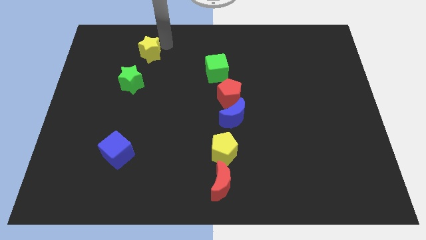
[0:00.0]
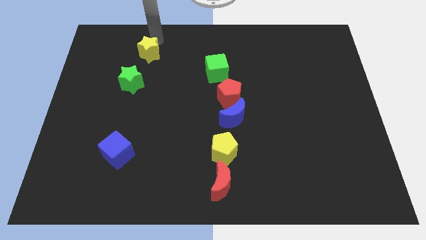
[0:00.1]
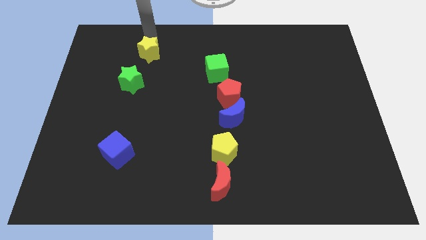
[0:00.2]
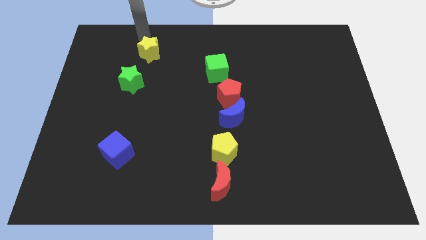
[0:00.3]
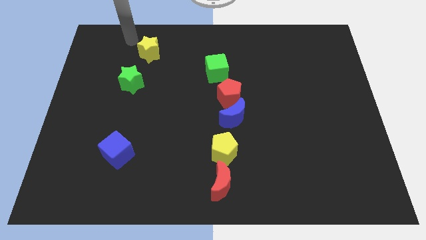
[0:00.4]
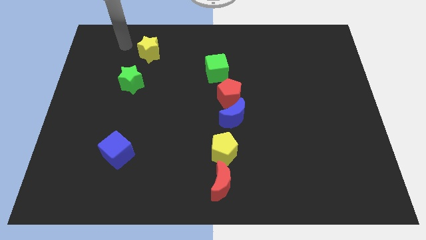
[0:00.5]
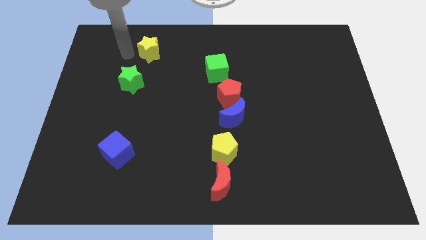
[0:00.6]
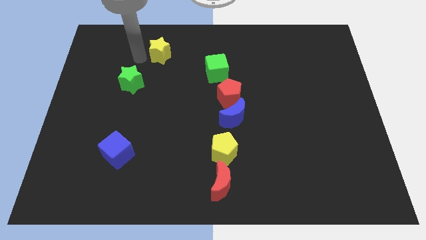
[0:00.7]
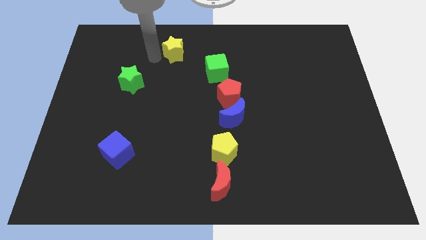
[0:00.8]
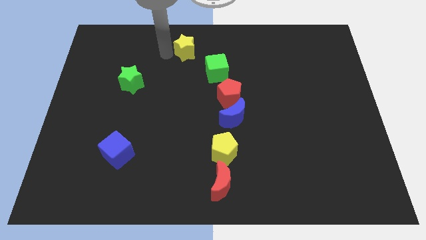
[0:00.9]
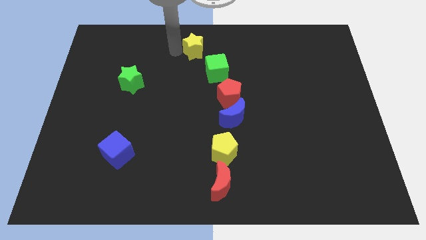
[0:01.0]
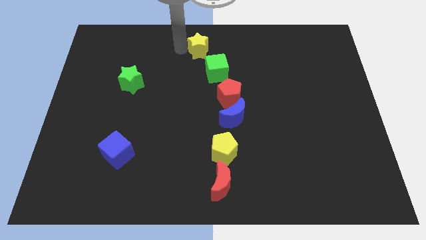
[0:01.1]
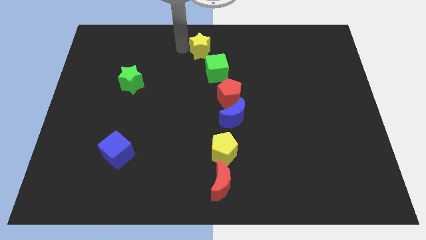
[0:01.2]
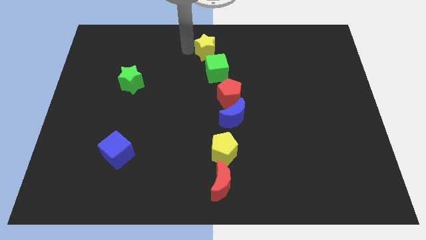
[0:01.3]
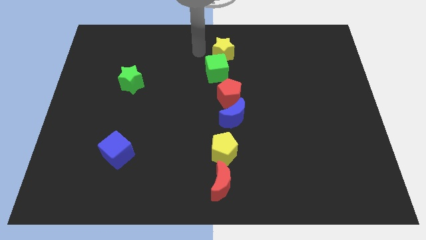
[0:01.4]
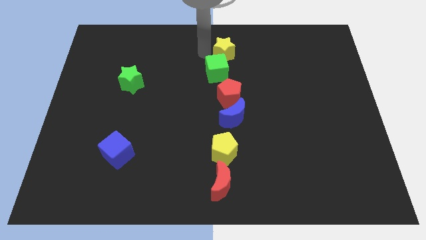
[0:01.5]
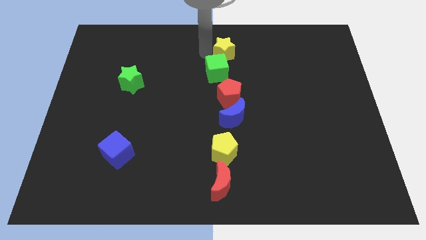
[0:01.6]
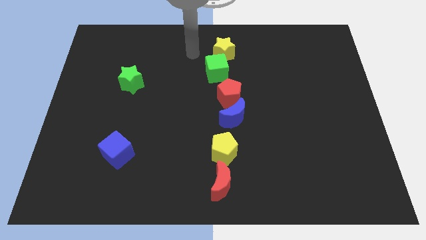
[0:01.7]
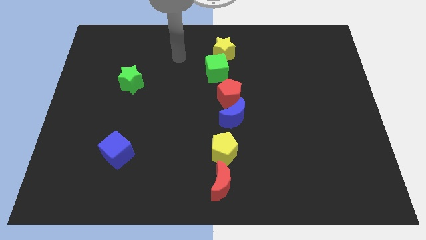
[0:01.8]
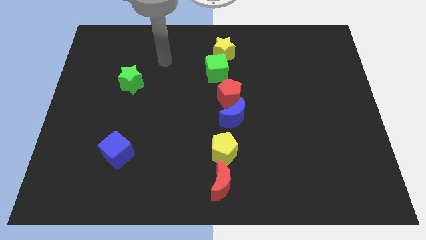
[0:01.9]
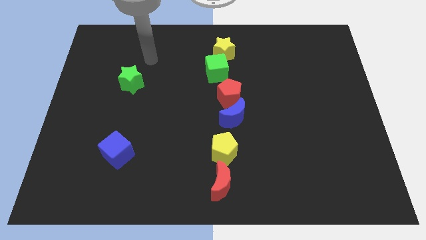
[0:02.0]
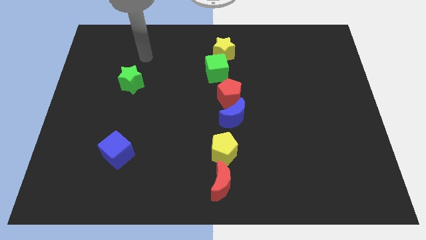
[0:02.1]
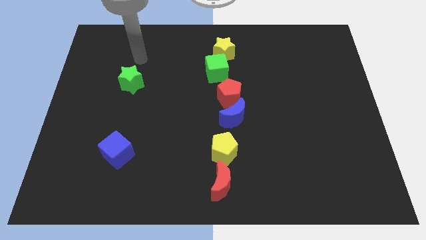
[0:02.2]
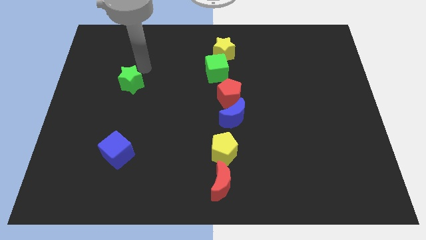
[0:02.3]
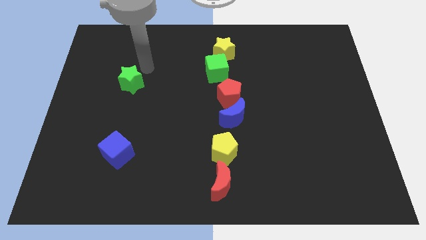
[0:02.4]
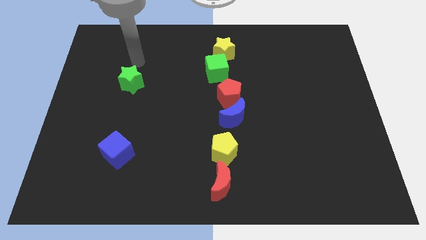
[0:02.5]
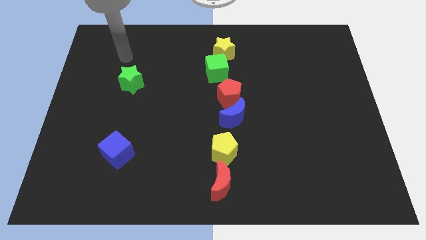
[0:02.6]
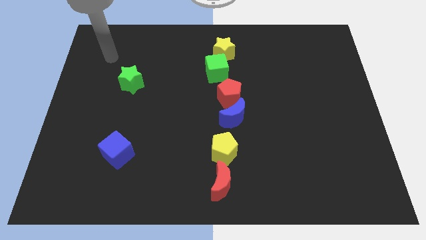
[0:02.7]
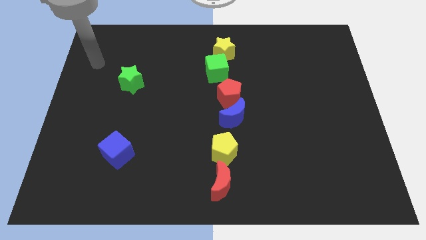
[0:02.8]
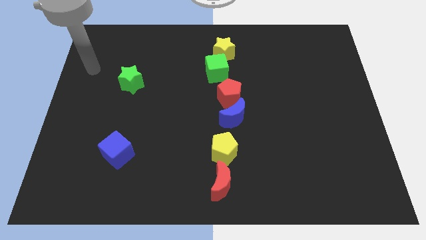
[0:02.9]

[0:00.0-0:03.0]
move your arm away from green star

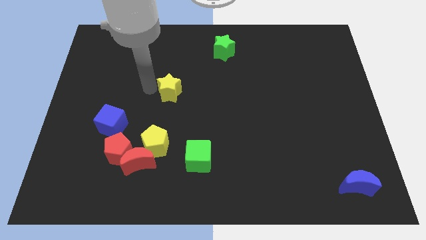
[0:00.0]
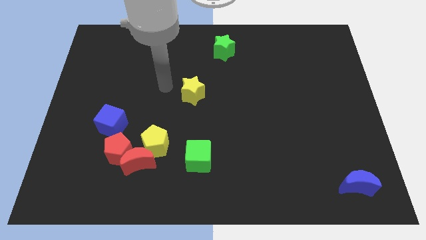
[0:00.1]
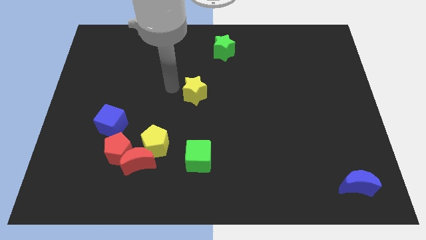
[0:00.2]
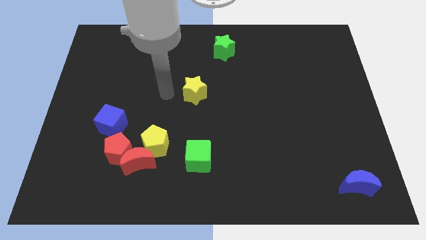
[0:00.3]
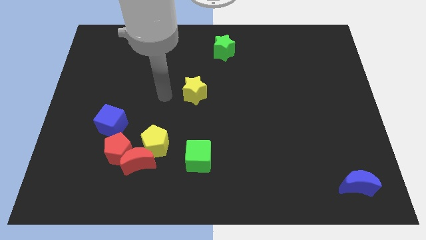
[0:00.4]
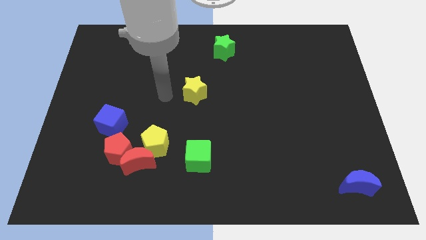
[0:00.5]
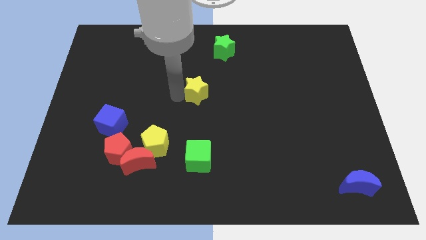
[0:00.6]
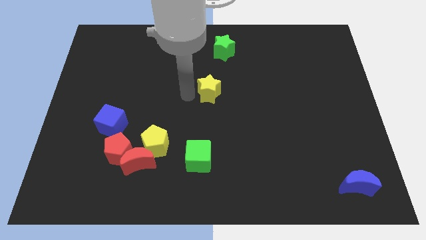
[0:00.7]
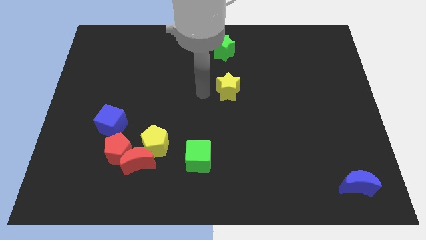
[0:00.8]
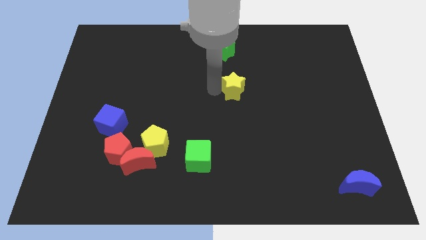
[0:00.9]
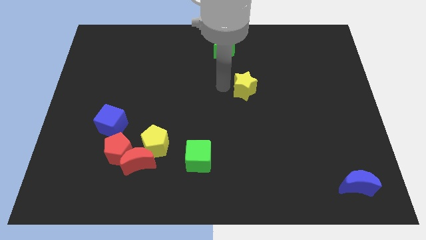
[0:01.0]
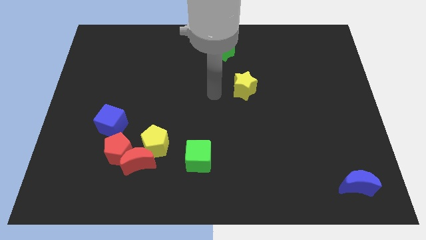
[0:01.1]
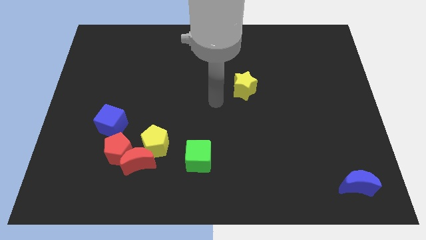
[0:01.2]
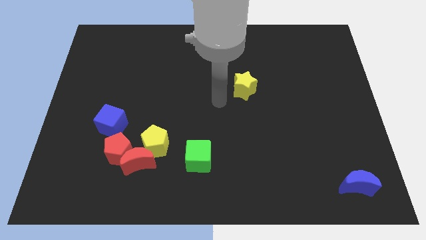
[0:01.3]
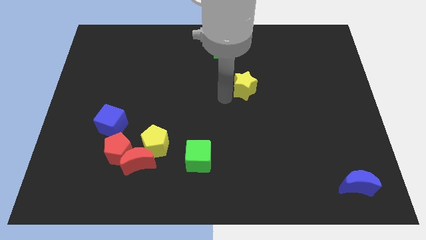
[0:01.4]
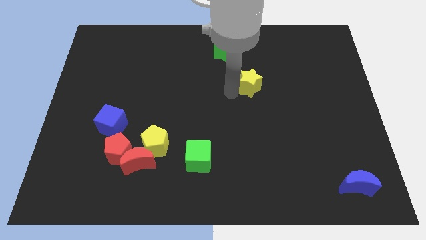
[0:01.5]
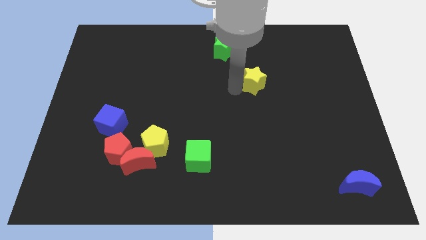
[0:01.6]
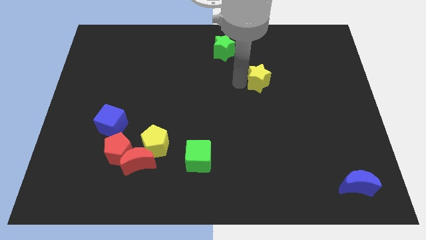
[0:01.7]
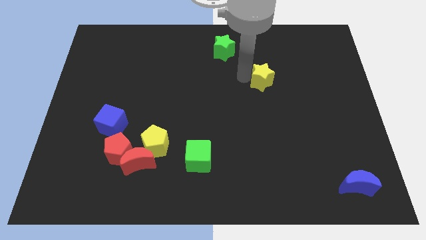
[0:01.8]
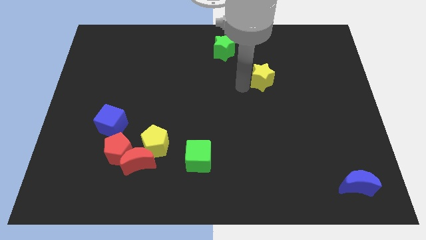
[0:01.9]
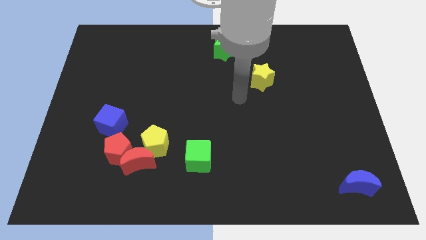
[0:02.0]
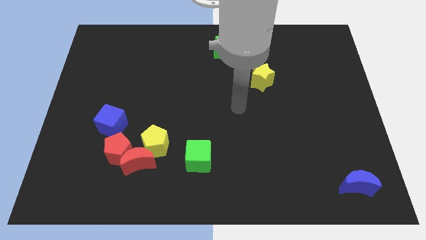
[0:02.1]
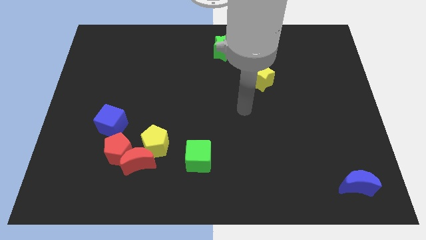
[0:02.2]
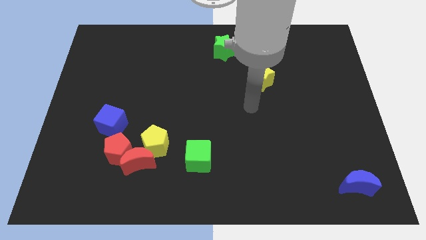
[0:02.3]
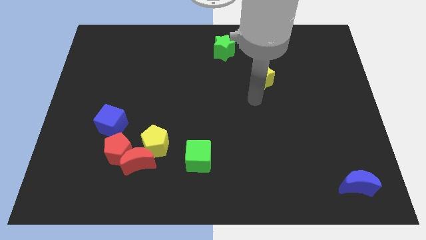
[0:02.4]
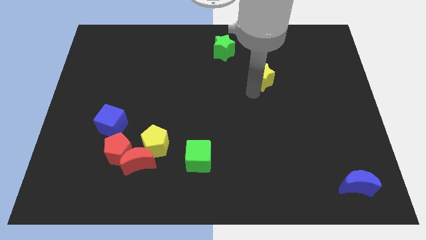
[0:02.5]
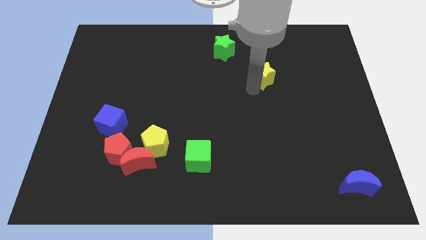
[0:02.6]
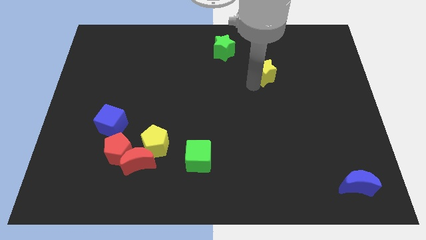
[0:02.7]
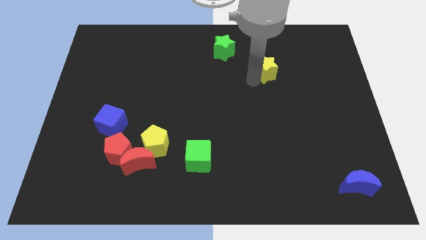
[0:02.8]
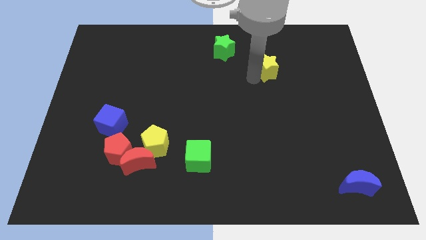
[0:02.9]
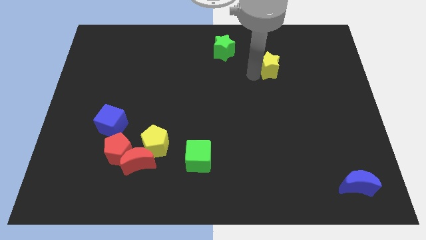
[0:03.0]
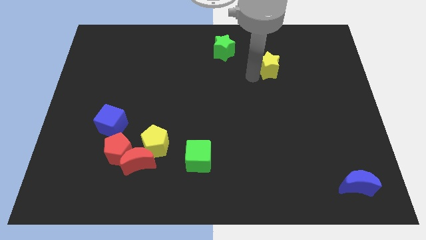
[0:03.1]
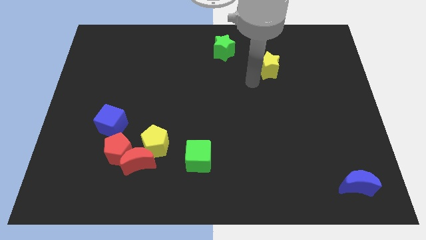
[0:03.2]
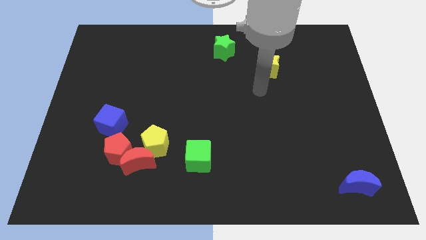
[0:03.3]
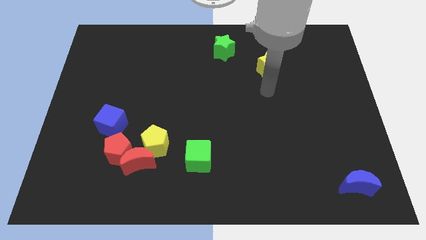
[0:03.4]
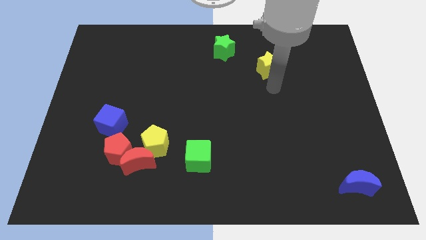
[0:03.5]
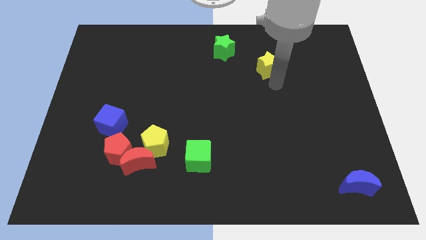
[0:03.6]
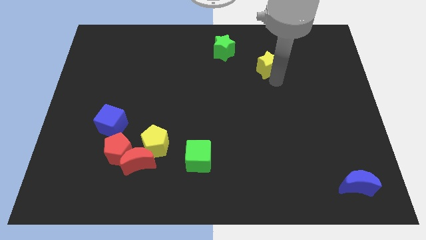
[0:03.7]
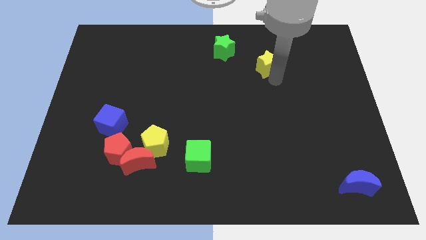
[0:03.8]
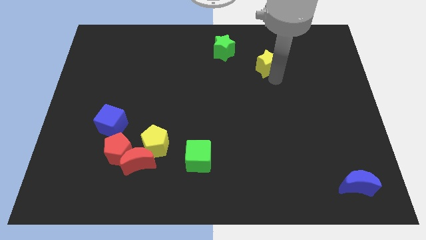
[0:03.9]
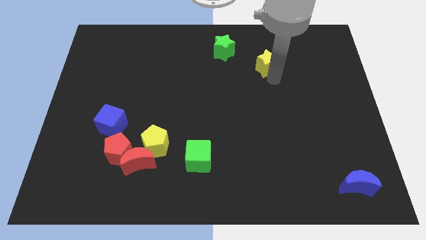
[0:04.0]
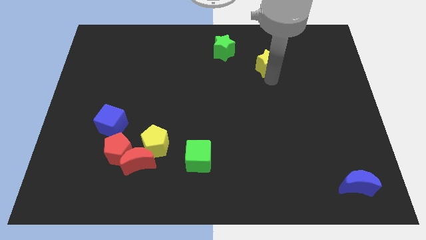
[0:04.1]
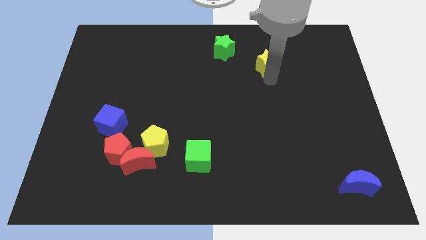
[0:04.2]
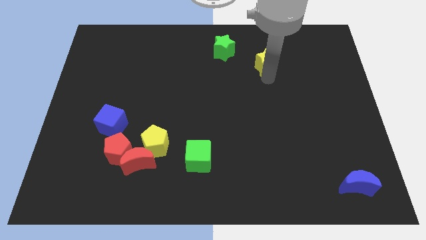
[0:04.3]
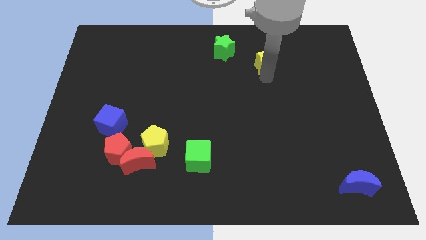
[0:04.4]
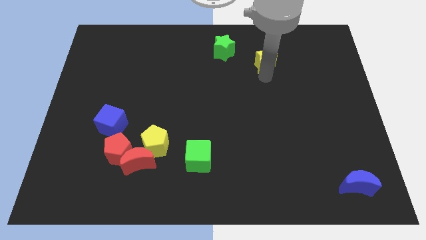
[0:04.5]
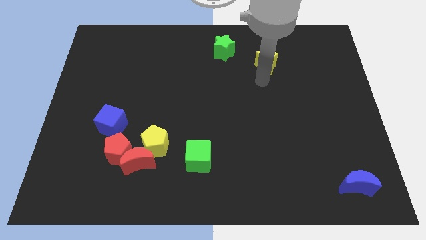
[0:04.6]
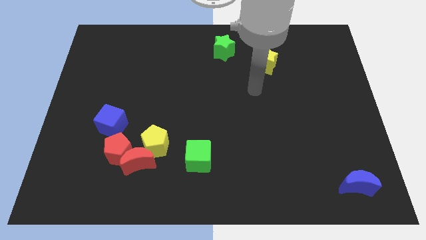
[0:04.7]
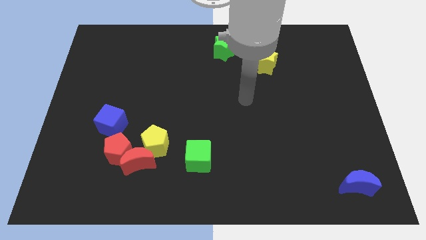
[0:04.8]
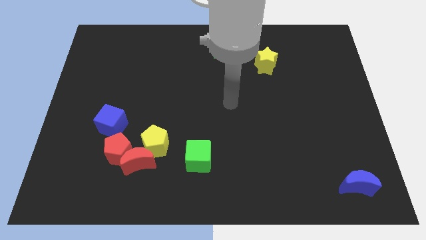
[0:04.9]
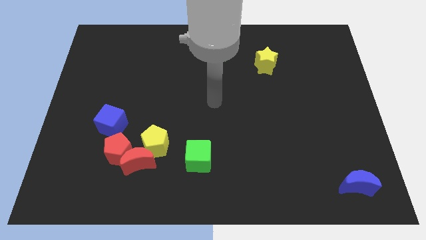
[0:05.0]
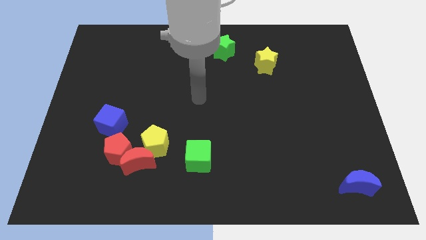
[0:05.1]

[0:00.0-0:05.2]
place the yellow star to the bottom right of the green star

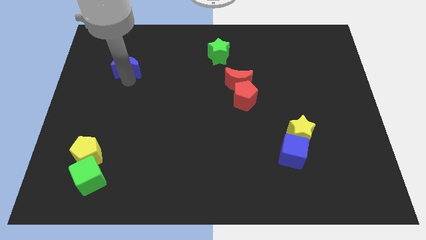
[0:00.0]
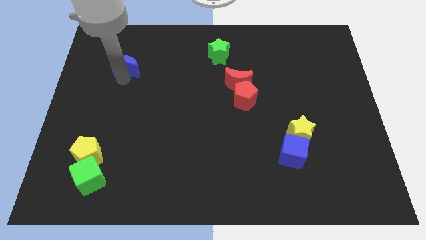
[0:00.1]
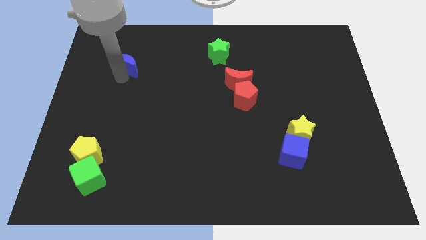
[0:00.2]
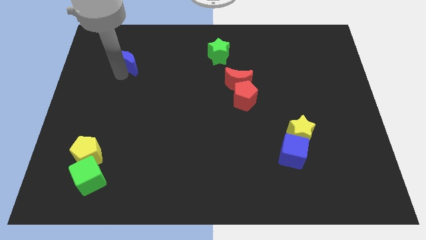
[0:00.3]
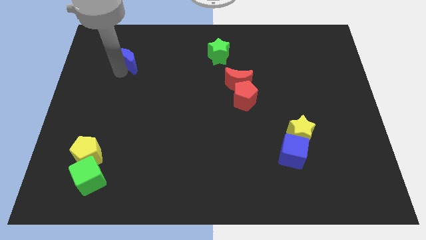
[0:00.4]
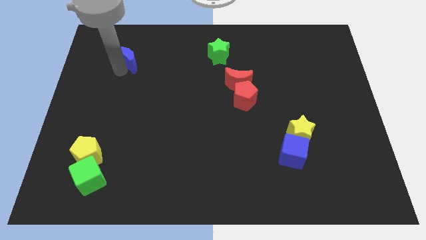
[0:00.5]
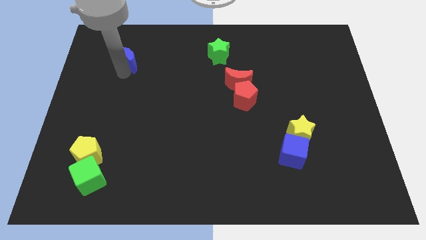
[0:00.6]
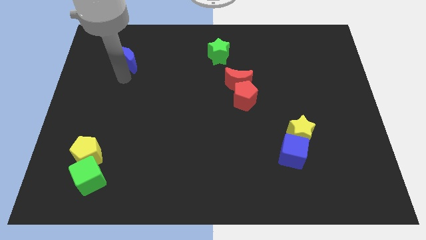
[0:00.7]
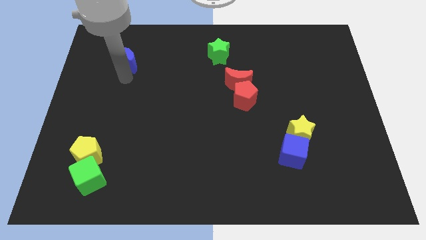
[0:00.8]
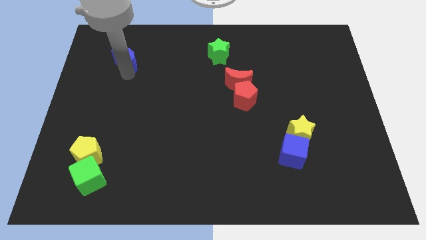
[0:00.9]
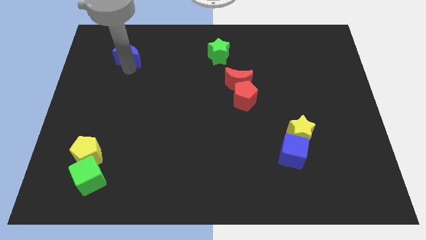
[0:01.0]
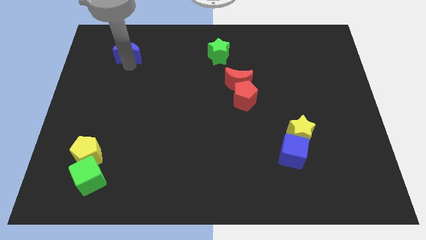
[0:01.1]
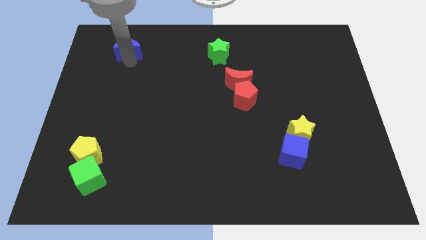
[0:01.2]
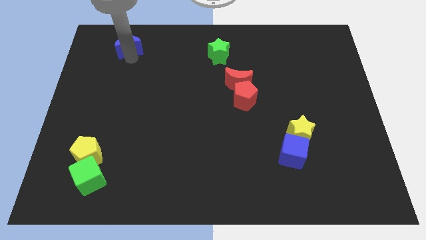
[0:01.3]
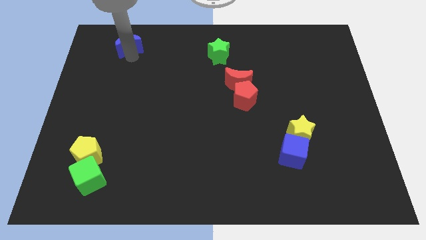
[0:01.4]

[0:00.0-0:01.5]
drag the blue moon slightly upwards
